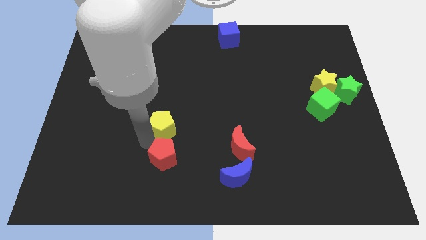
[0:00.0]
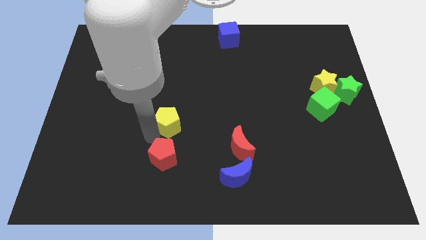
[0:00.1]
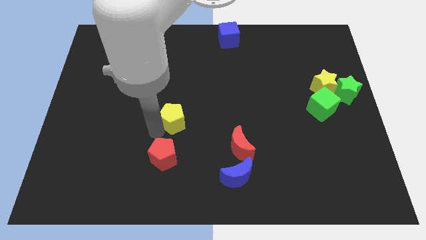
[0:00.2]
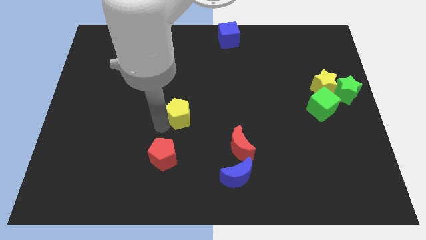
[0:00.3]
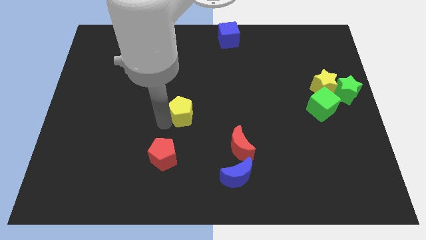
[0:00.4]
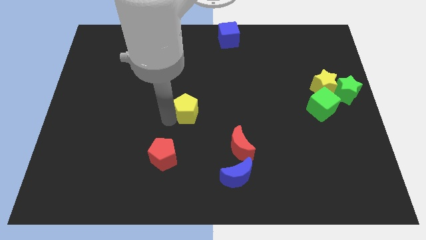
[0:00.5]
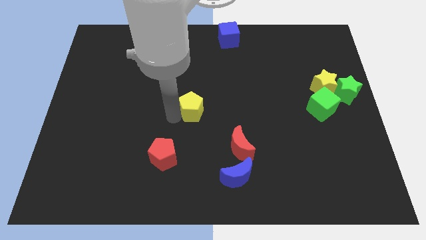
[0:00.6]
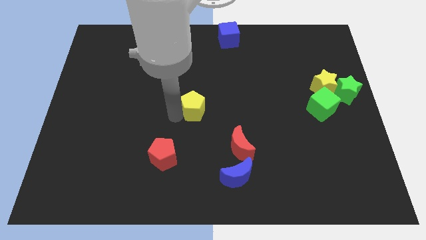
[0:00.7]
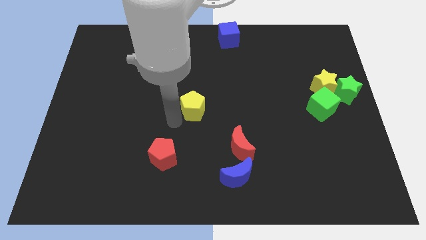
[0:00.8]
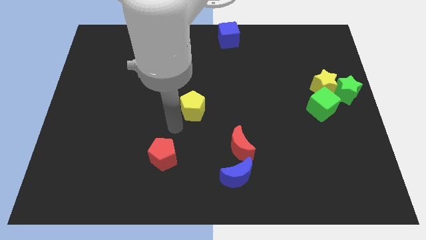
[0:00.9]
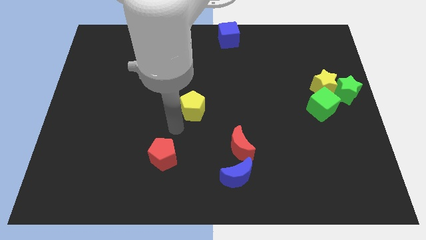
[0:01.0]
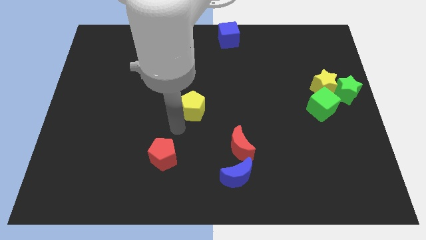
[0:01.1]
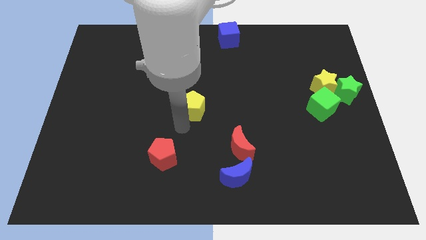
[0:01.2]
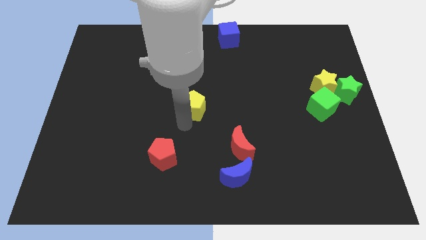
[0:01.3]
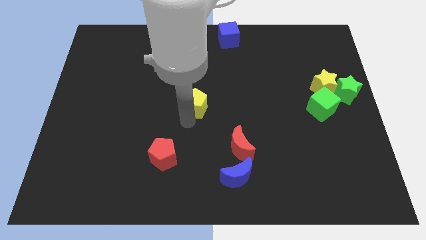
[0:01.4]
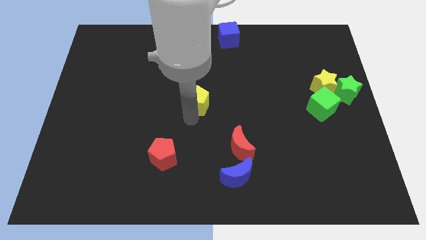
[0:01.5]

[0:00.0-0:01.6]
move yellow pentagon away from the red pentagon

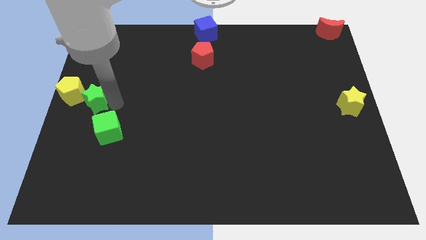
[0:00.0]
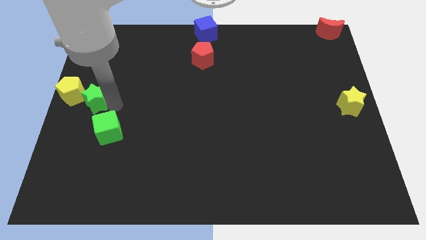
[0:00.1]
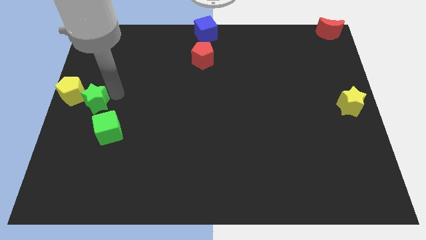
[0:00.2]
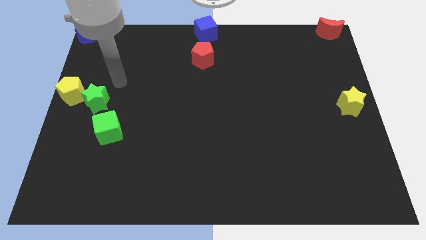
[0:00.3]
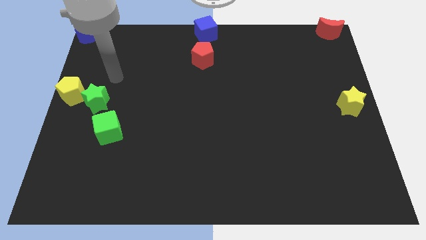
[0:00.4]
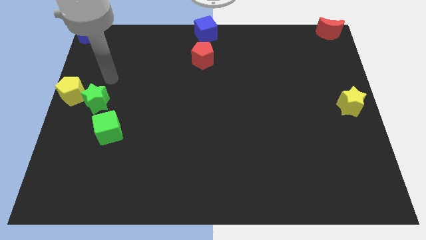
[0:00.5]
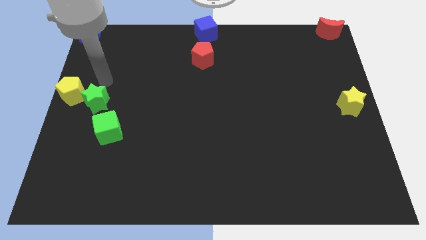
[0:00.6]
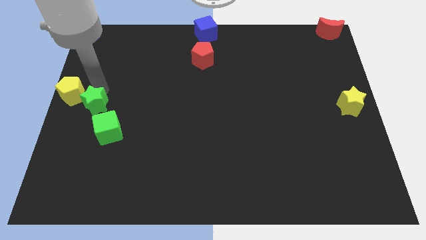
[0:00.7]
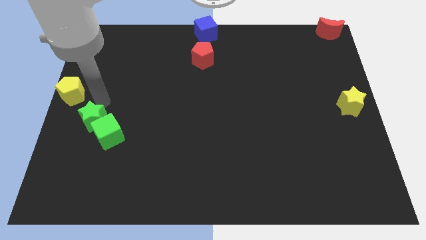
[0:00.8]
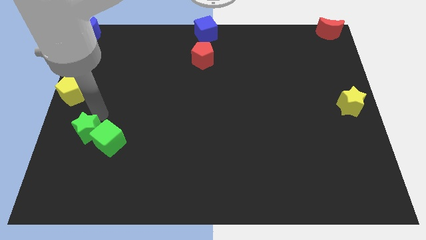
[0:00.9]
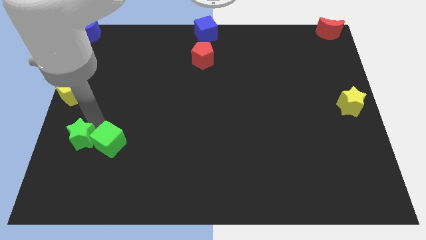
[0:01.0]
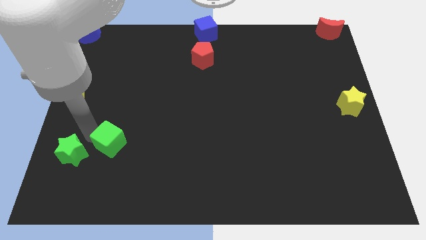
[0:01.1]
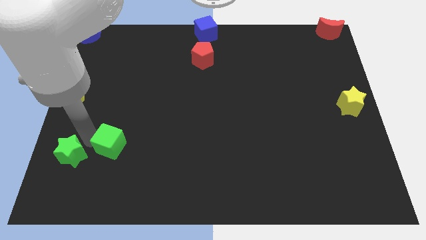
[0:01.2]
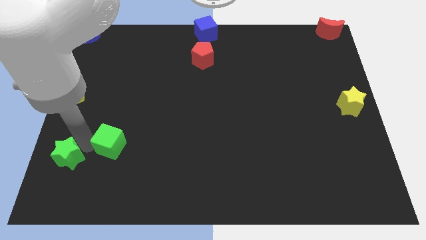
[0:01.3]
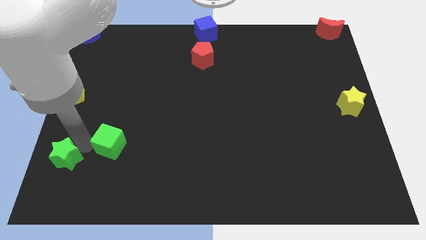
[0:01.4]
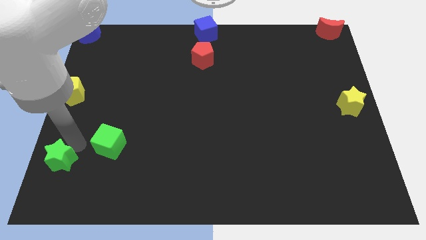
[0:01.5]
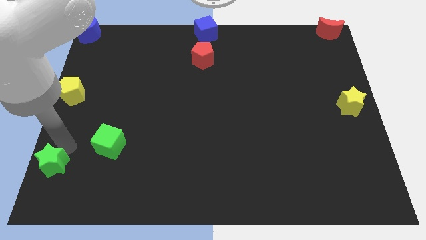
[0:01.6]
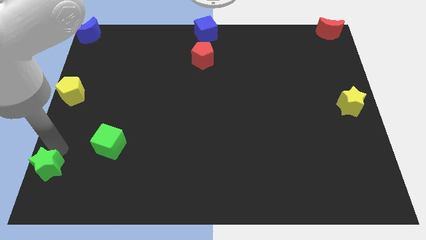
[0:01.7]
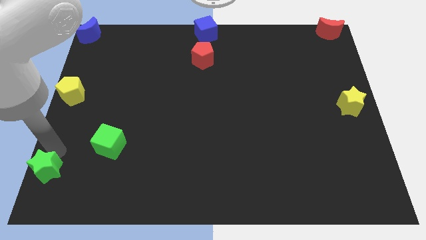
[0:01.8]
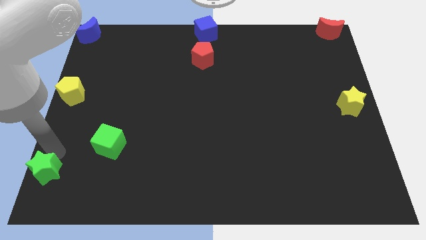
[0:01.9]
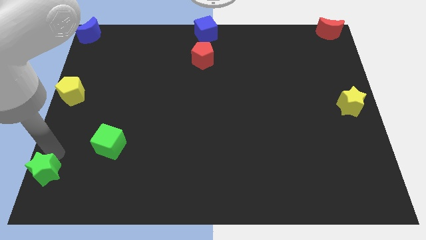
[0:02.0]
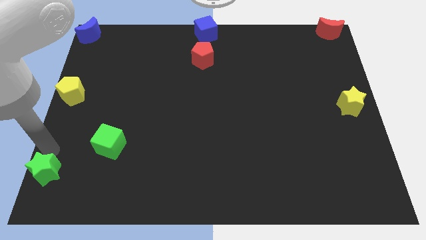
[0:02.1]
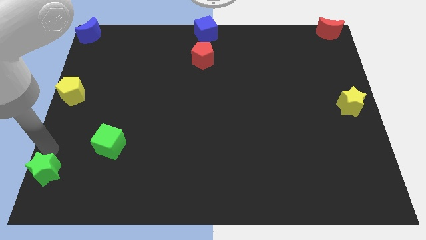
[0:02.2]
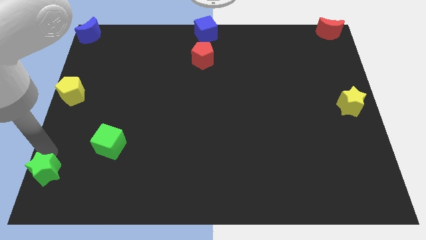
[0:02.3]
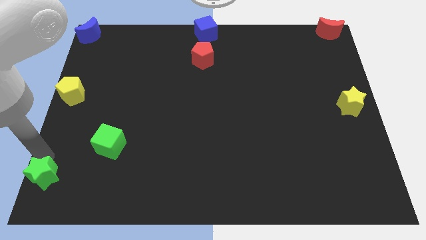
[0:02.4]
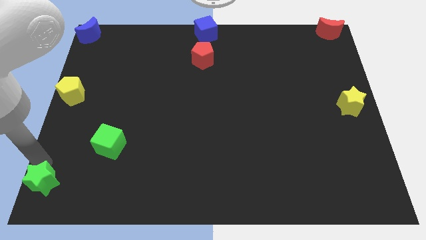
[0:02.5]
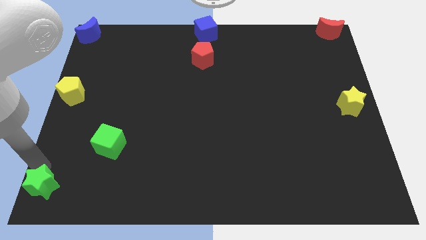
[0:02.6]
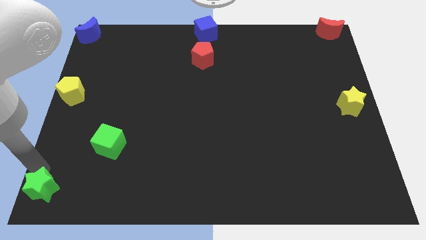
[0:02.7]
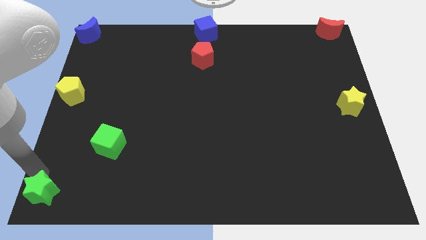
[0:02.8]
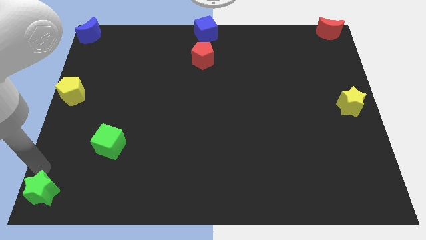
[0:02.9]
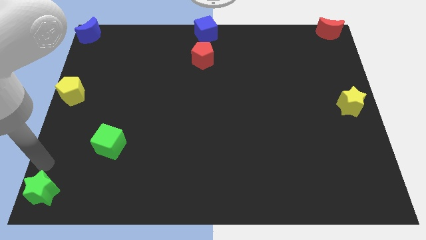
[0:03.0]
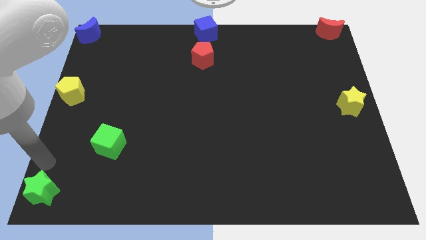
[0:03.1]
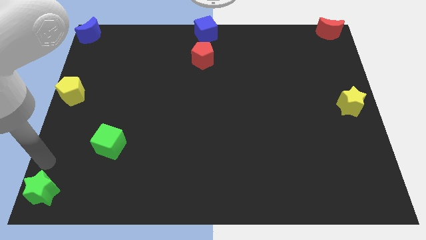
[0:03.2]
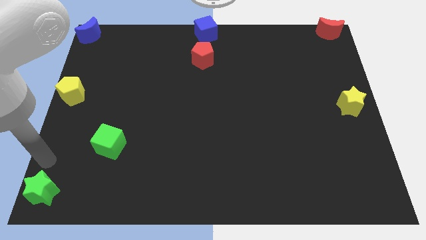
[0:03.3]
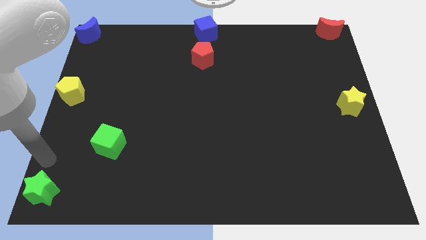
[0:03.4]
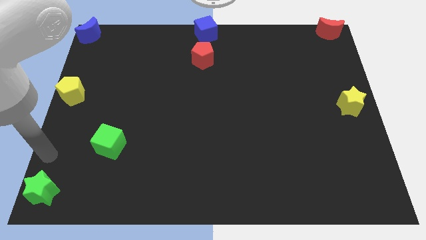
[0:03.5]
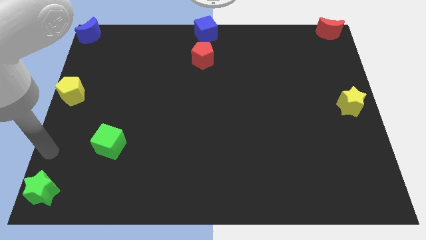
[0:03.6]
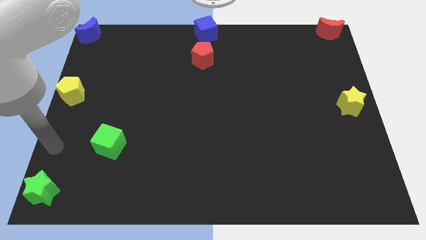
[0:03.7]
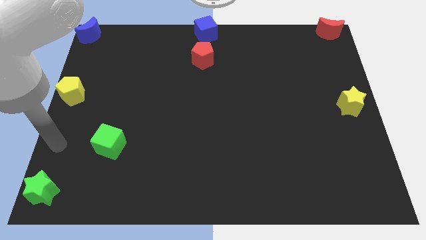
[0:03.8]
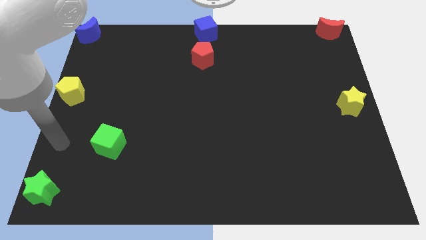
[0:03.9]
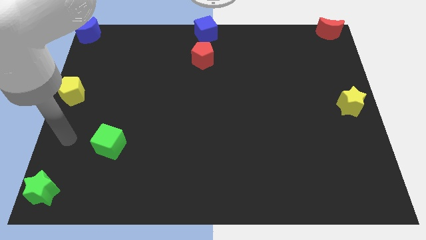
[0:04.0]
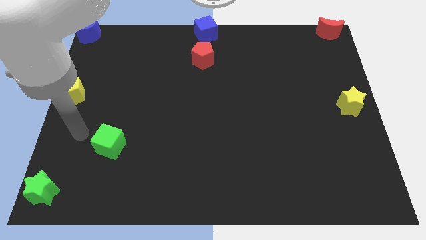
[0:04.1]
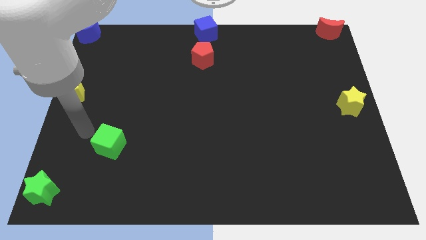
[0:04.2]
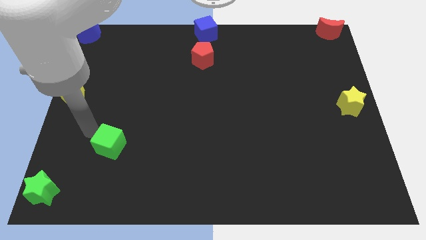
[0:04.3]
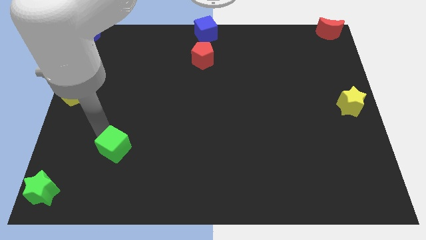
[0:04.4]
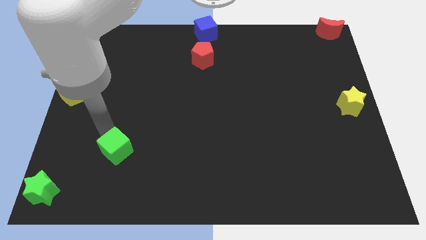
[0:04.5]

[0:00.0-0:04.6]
push the green star to the bottom left of the board

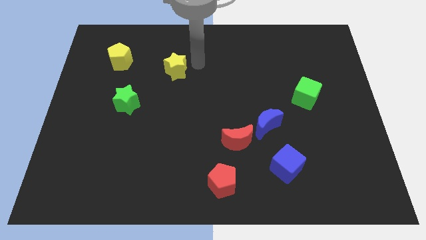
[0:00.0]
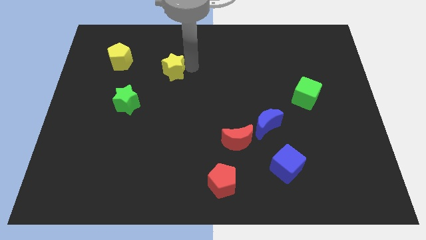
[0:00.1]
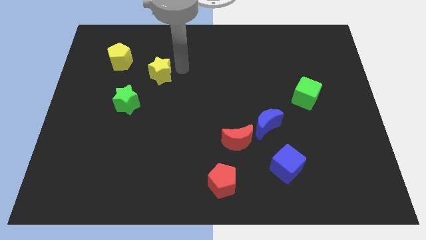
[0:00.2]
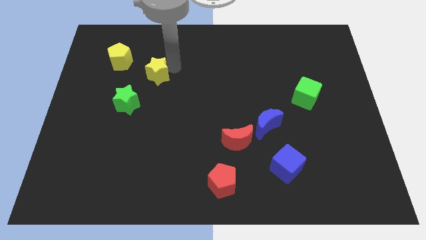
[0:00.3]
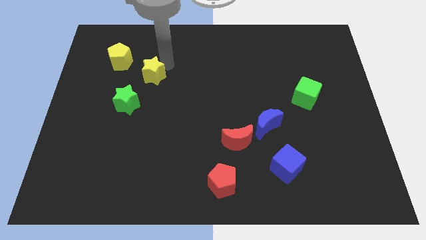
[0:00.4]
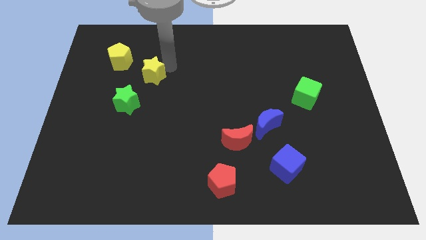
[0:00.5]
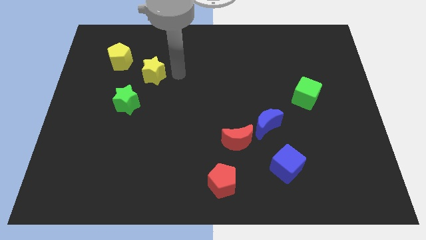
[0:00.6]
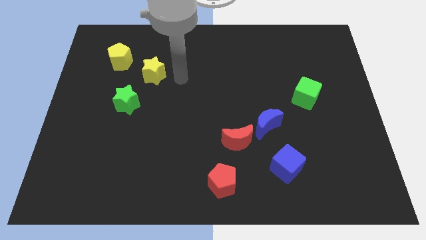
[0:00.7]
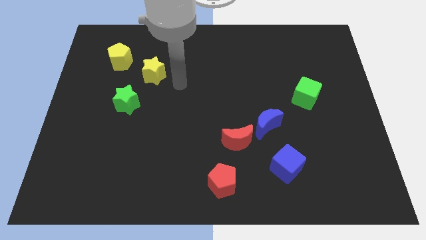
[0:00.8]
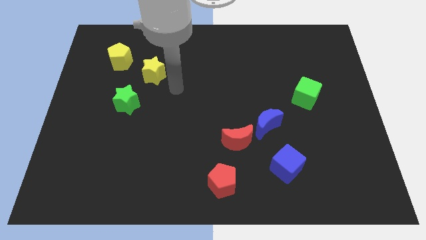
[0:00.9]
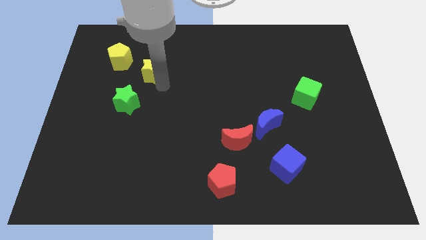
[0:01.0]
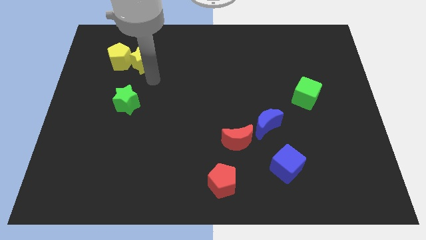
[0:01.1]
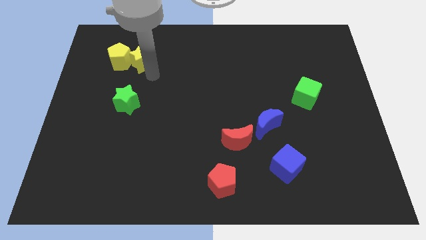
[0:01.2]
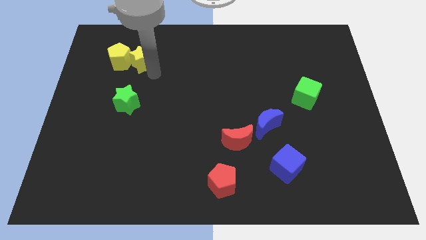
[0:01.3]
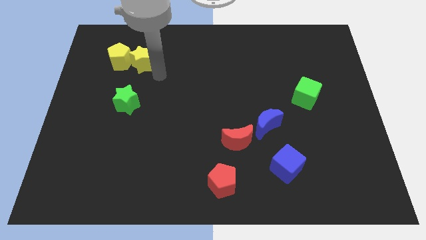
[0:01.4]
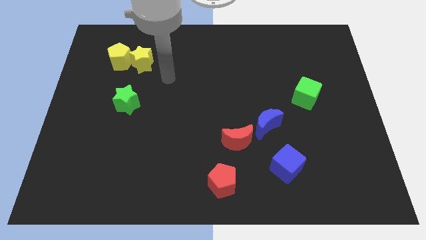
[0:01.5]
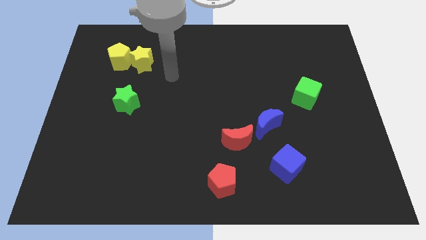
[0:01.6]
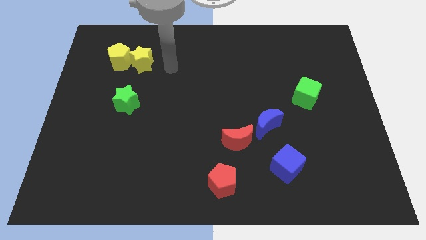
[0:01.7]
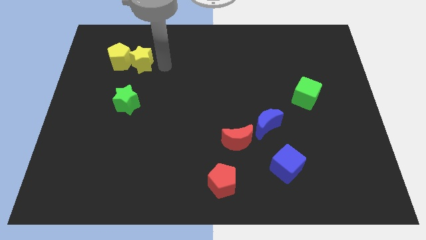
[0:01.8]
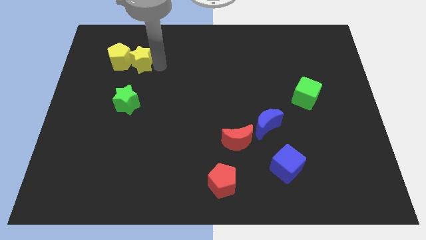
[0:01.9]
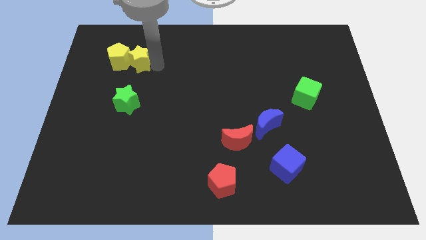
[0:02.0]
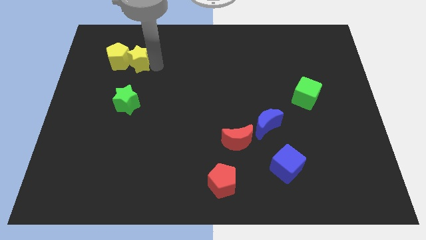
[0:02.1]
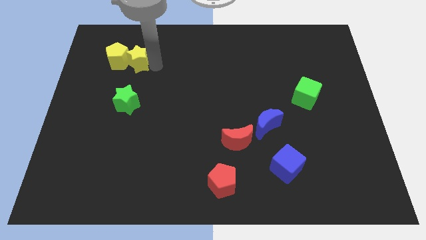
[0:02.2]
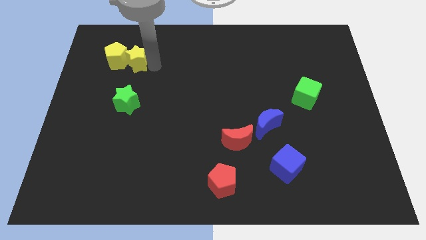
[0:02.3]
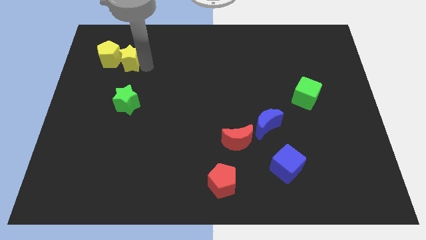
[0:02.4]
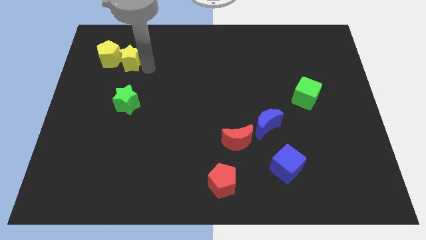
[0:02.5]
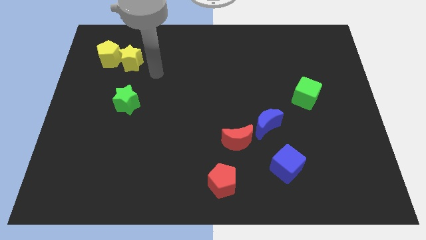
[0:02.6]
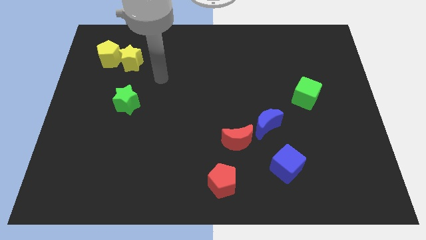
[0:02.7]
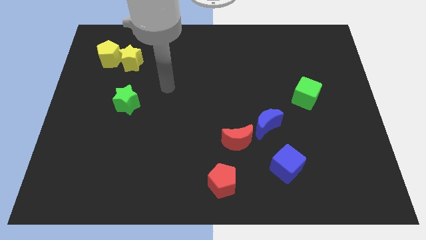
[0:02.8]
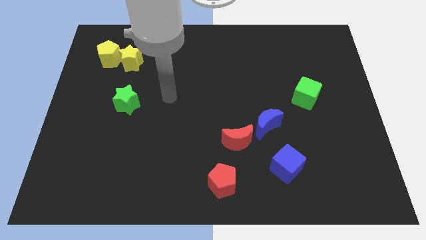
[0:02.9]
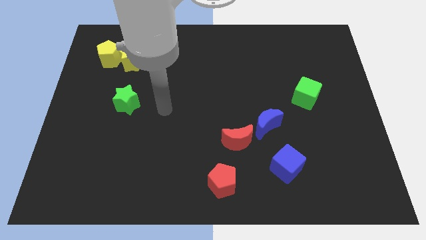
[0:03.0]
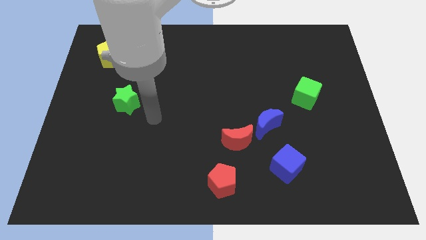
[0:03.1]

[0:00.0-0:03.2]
push the yellow star into the yellow pentagon from the right
